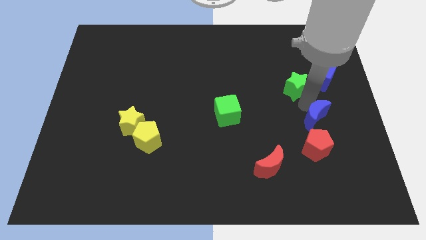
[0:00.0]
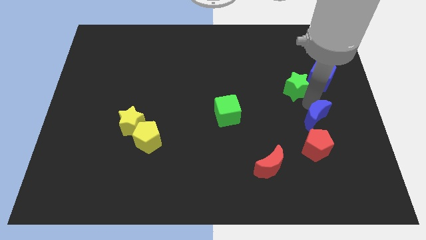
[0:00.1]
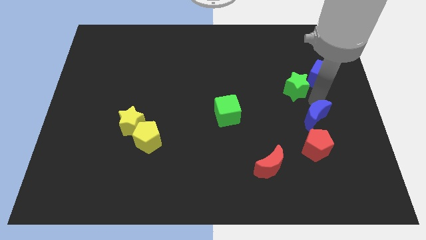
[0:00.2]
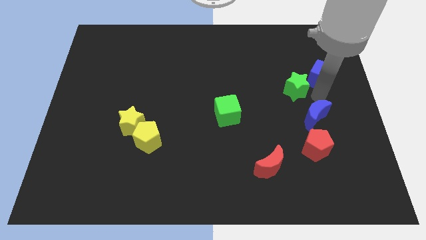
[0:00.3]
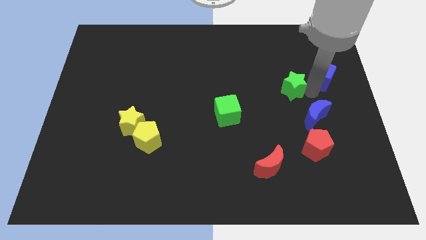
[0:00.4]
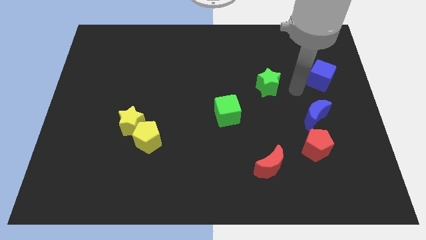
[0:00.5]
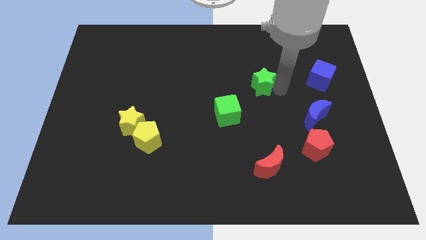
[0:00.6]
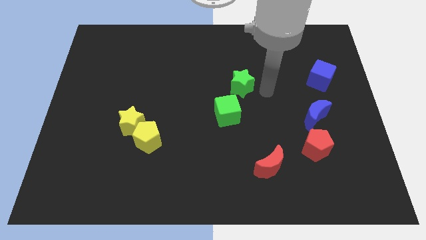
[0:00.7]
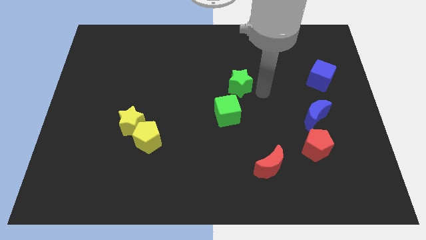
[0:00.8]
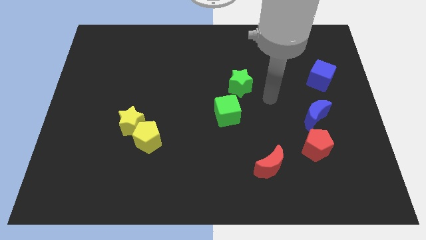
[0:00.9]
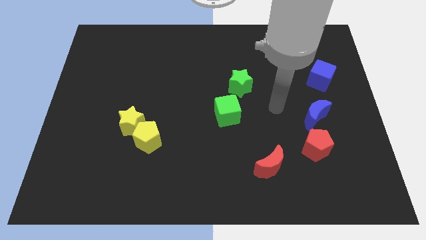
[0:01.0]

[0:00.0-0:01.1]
move the green star diagonal to the green cube

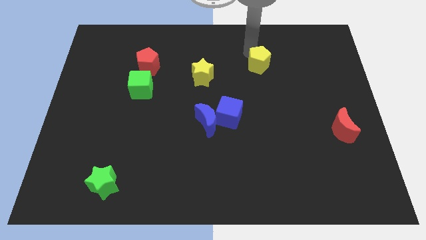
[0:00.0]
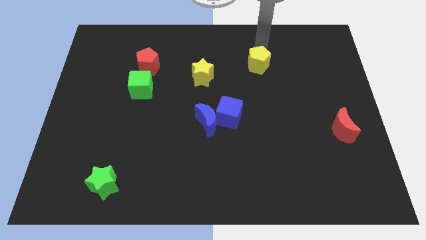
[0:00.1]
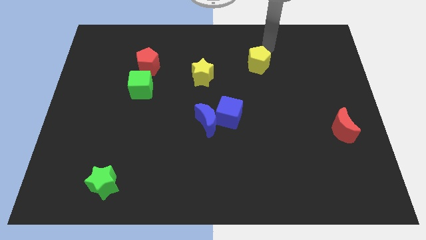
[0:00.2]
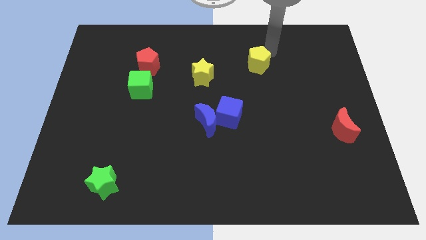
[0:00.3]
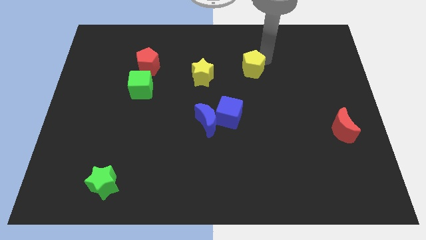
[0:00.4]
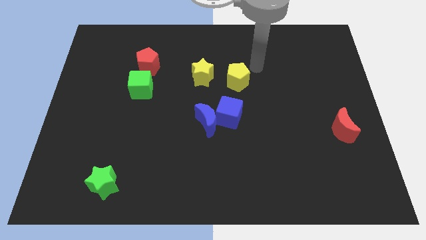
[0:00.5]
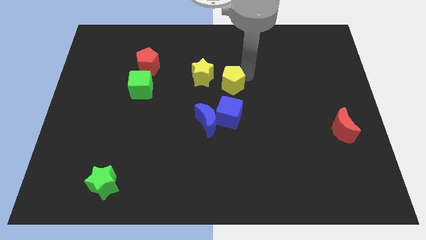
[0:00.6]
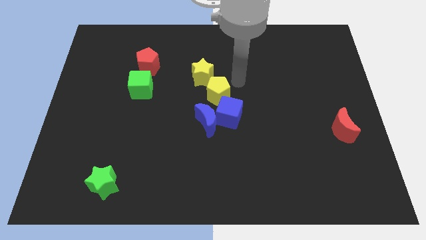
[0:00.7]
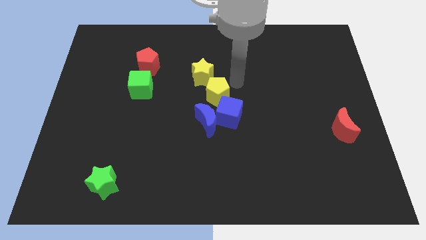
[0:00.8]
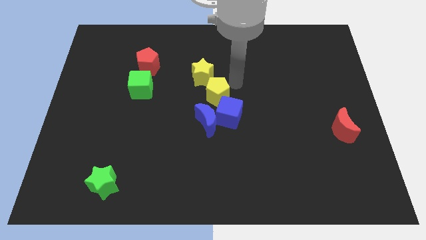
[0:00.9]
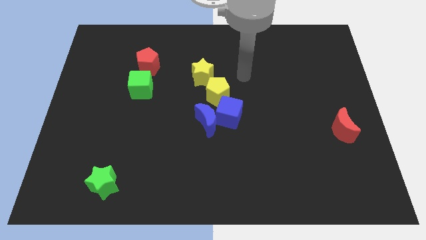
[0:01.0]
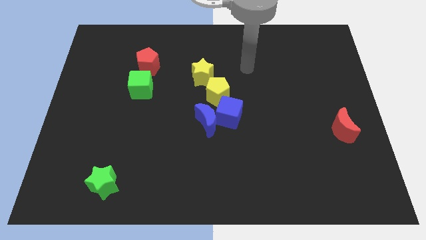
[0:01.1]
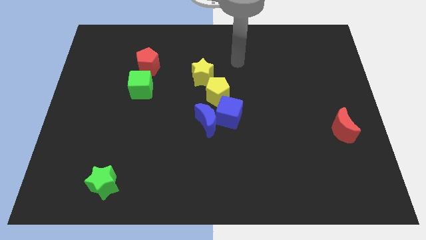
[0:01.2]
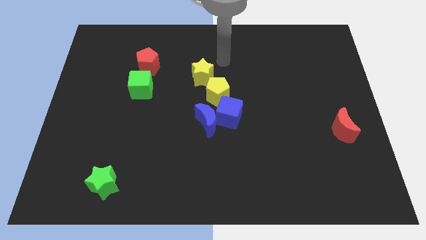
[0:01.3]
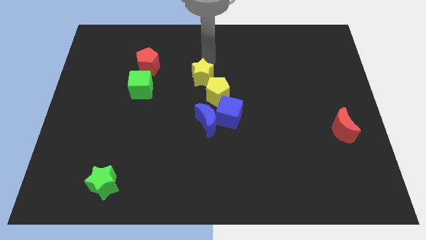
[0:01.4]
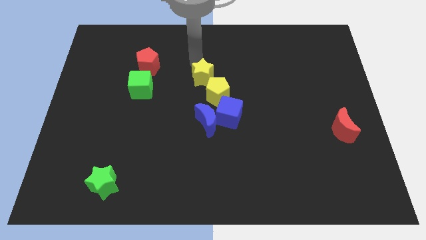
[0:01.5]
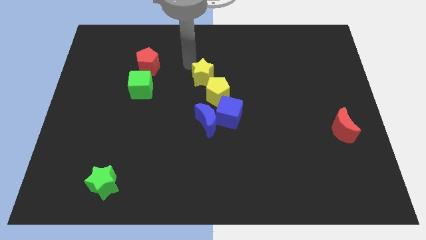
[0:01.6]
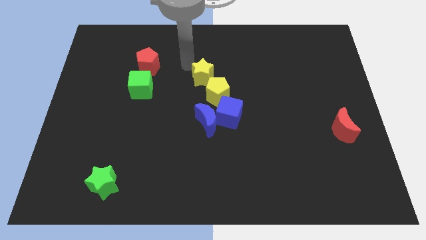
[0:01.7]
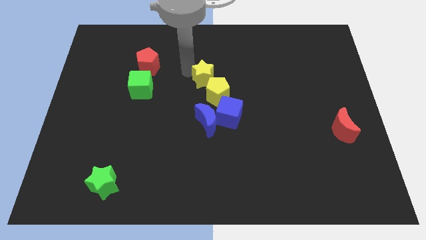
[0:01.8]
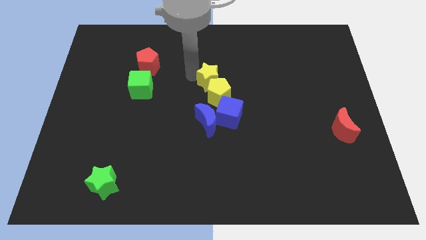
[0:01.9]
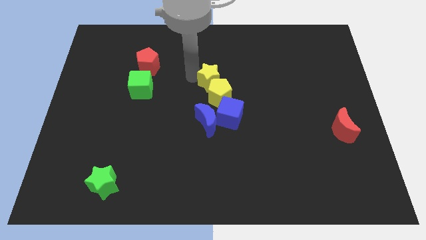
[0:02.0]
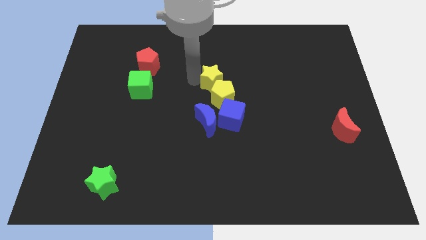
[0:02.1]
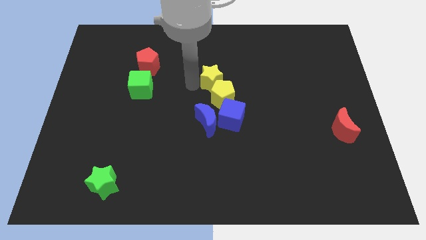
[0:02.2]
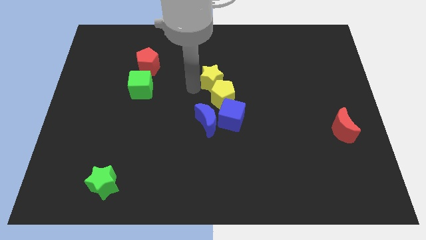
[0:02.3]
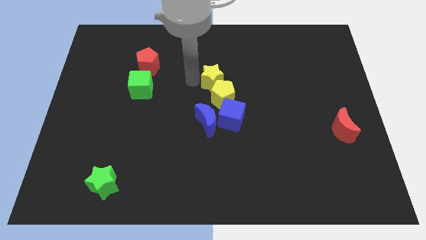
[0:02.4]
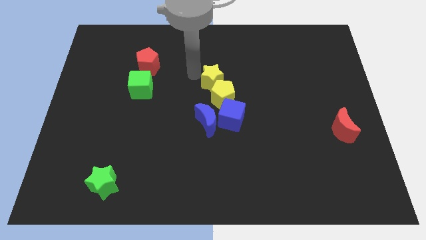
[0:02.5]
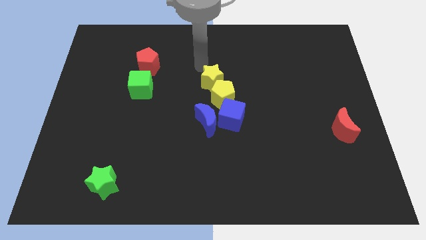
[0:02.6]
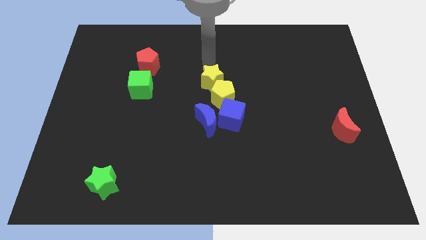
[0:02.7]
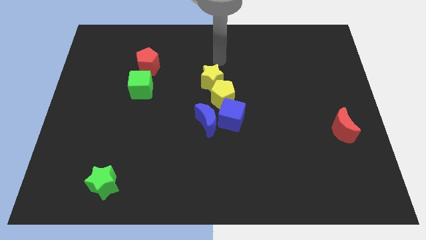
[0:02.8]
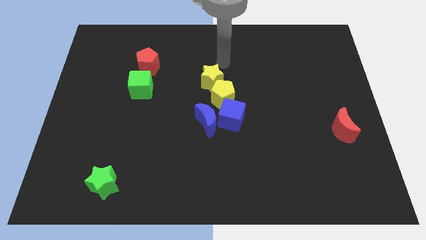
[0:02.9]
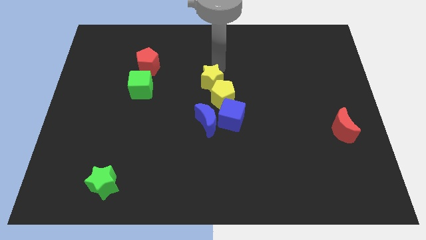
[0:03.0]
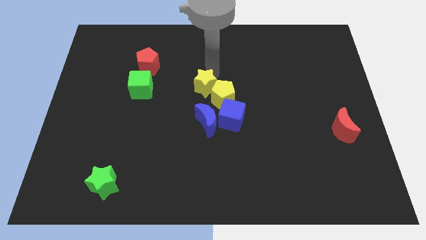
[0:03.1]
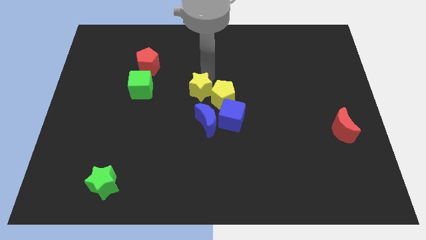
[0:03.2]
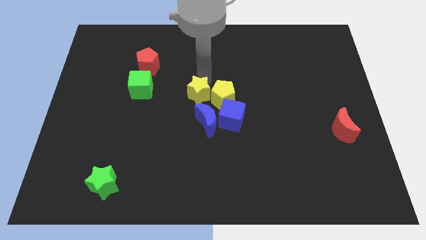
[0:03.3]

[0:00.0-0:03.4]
push the yellow star into the yellow pentagon

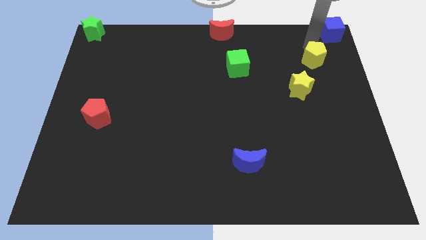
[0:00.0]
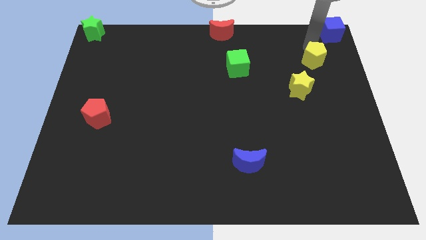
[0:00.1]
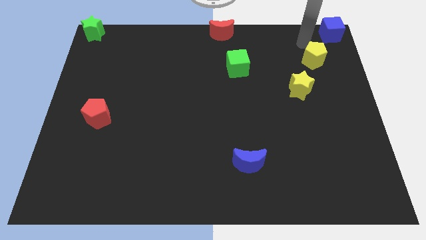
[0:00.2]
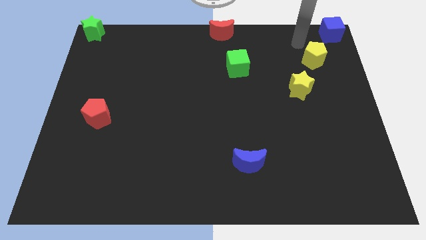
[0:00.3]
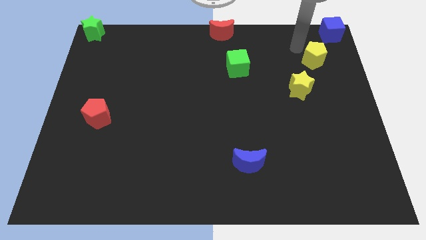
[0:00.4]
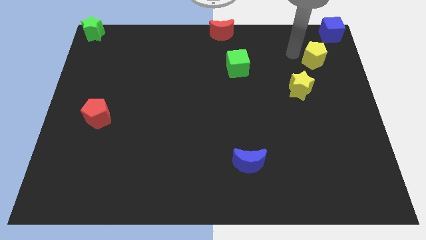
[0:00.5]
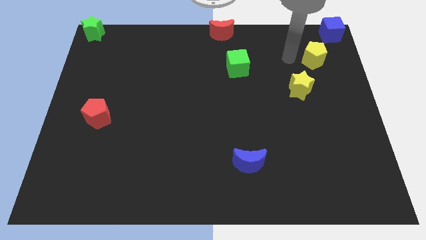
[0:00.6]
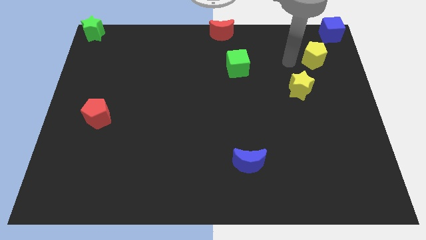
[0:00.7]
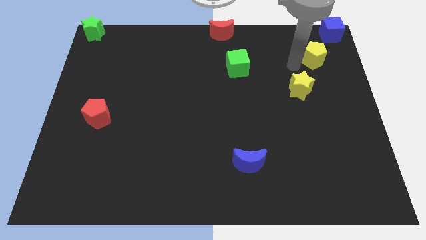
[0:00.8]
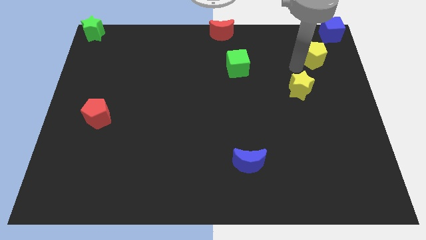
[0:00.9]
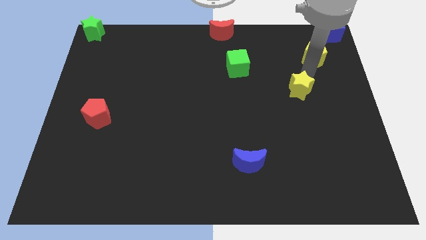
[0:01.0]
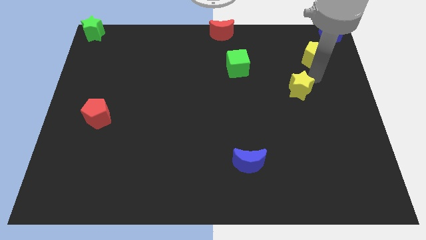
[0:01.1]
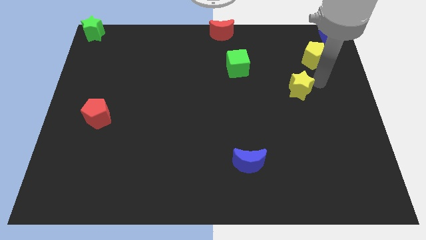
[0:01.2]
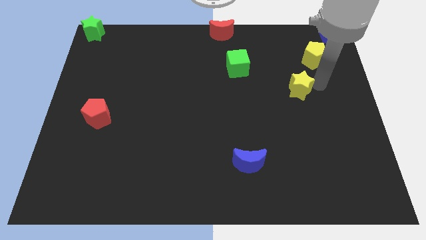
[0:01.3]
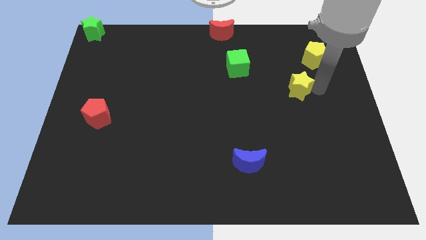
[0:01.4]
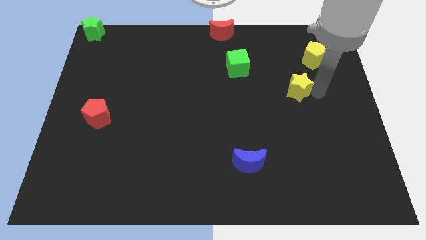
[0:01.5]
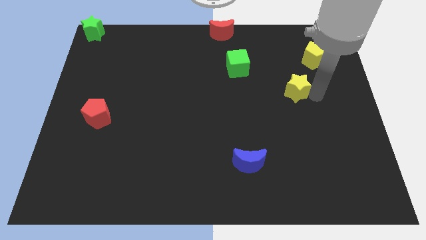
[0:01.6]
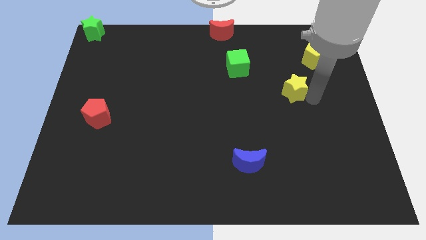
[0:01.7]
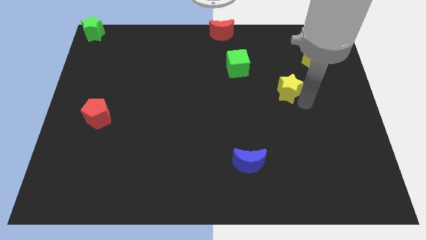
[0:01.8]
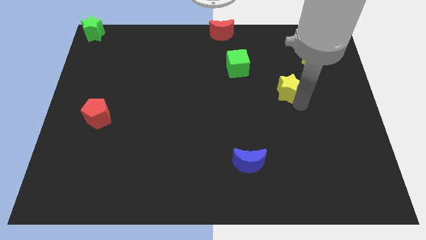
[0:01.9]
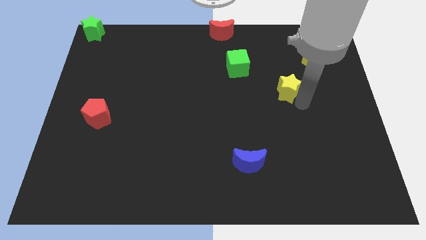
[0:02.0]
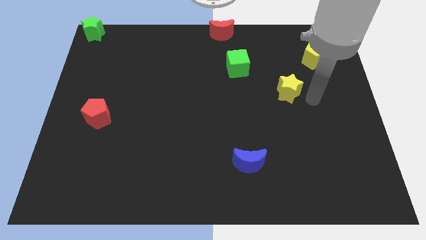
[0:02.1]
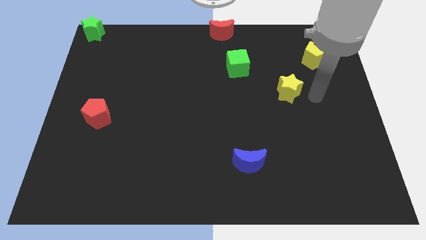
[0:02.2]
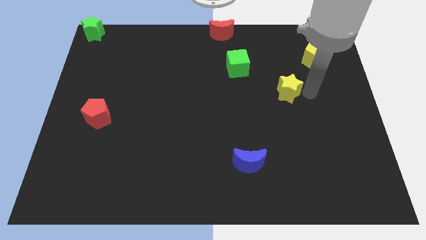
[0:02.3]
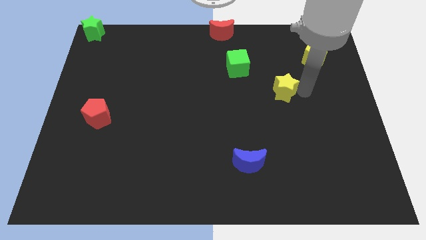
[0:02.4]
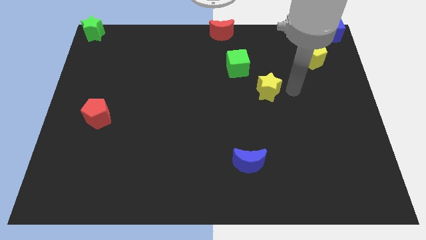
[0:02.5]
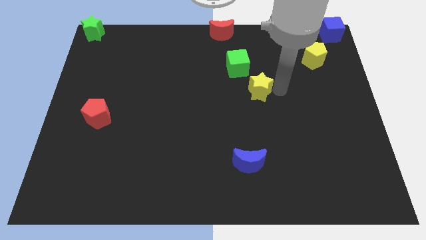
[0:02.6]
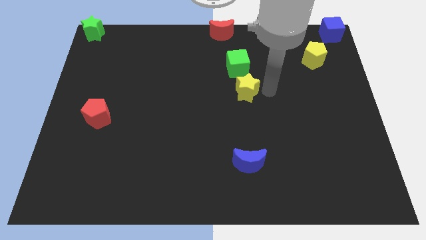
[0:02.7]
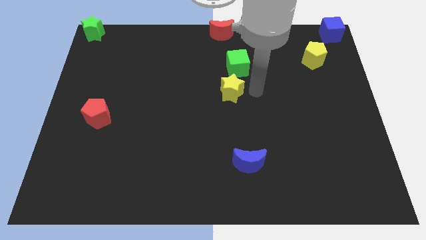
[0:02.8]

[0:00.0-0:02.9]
place the yellow star below the green cube

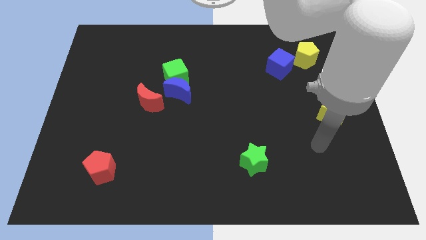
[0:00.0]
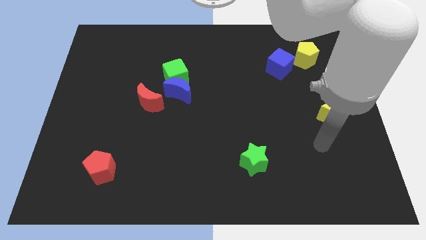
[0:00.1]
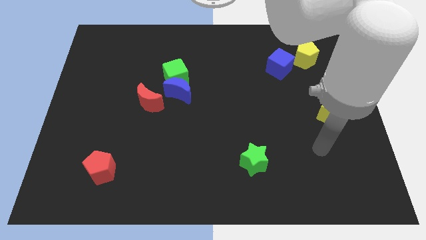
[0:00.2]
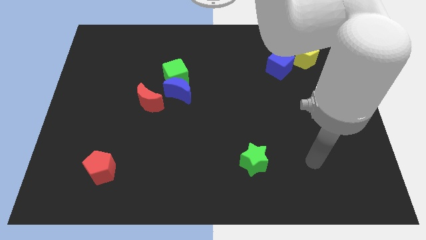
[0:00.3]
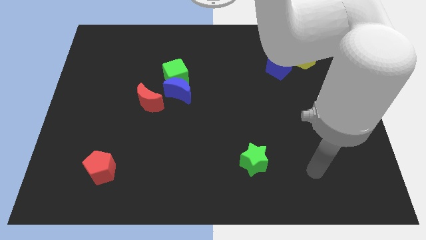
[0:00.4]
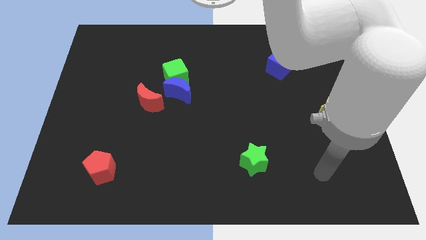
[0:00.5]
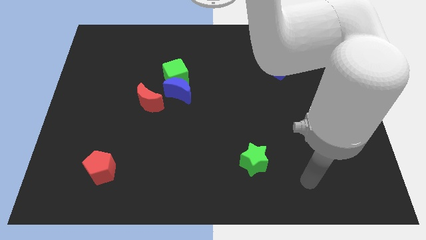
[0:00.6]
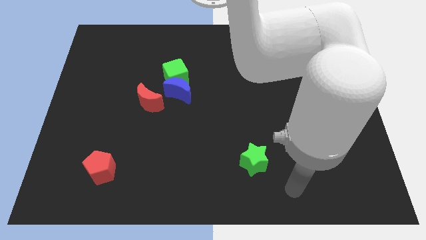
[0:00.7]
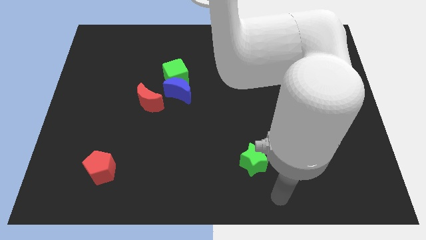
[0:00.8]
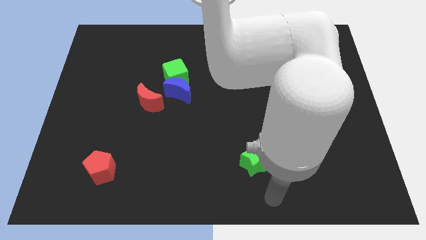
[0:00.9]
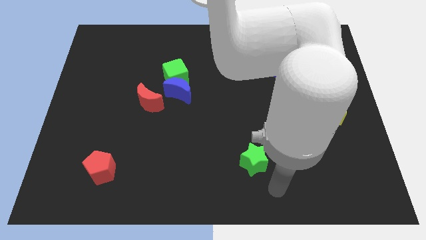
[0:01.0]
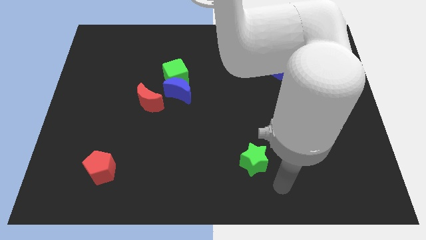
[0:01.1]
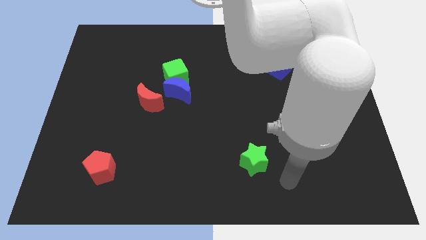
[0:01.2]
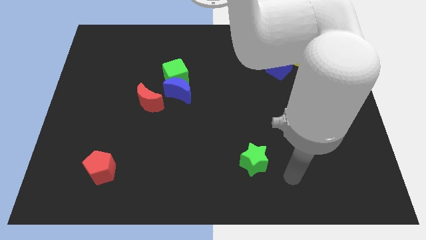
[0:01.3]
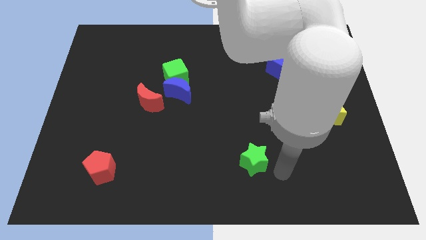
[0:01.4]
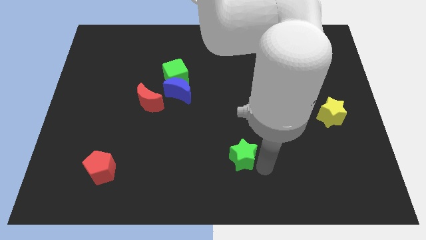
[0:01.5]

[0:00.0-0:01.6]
tap the green star
